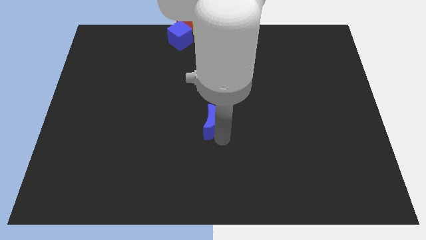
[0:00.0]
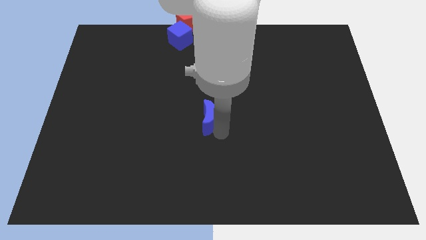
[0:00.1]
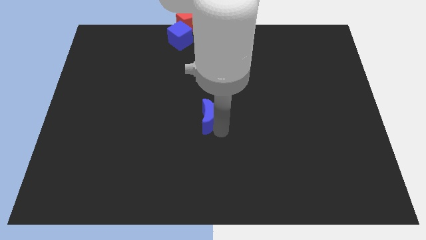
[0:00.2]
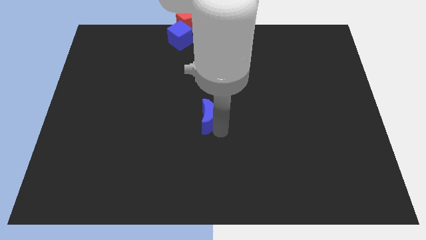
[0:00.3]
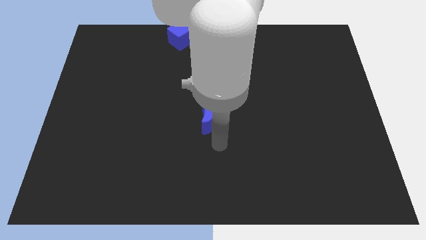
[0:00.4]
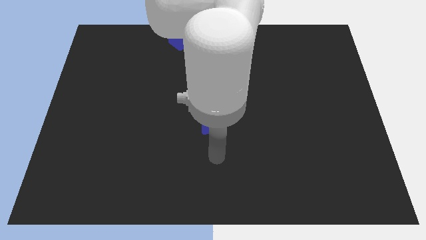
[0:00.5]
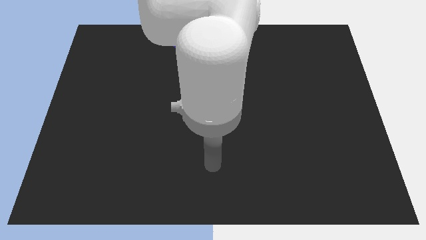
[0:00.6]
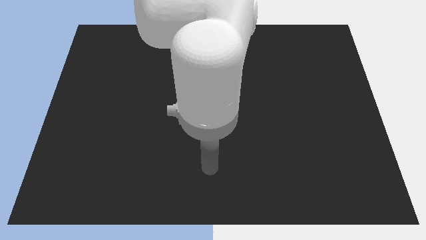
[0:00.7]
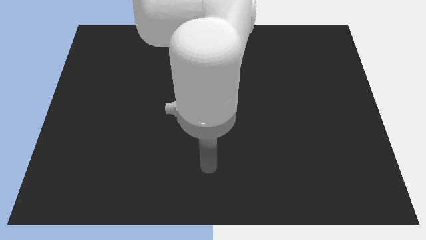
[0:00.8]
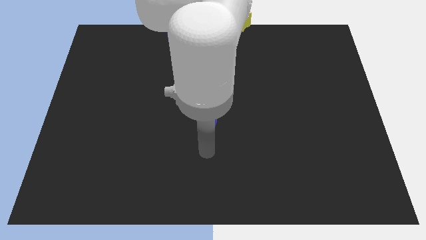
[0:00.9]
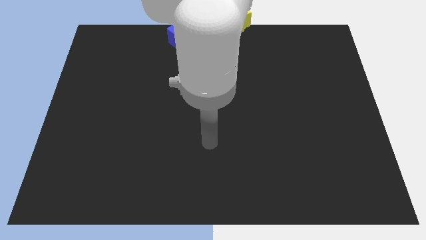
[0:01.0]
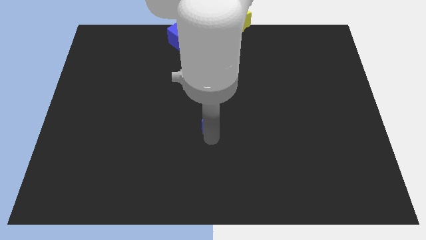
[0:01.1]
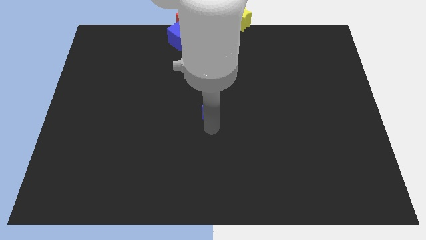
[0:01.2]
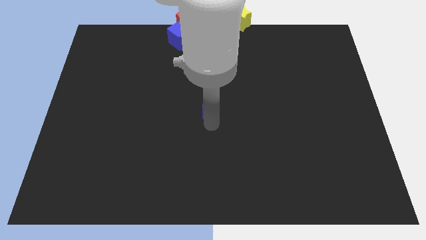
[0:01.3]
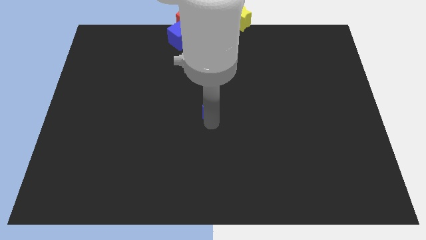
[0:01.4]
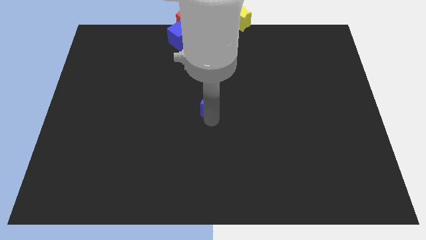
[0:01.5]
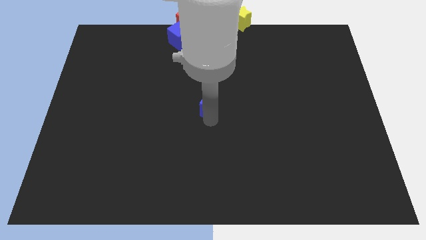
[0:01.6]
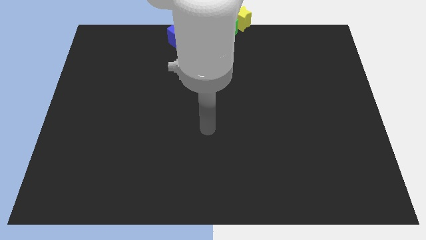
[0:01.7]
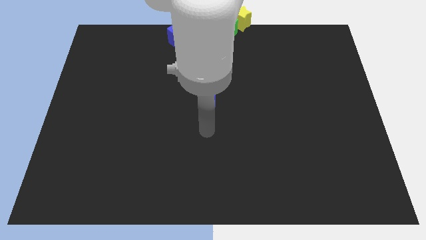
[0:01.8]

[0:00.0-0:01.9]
push the blue moon towards the center

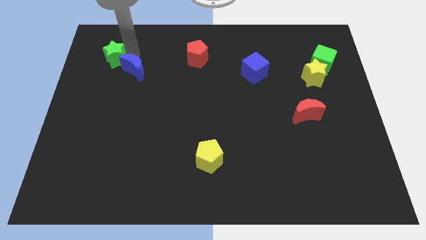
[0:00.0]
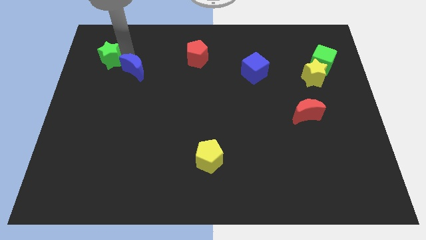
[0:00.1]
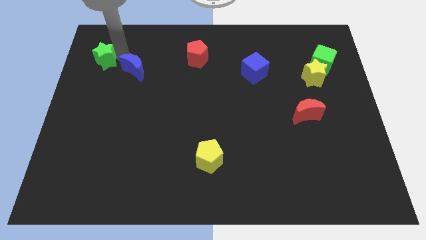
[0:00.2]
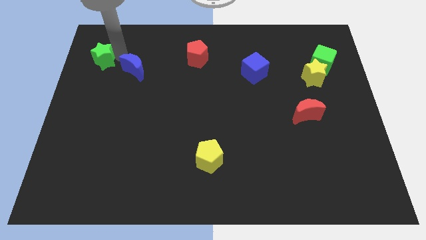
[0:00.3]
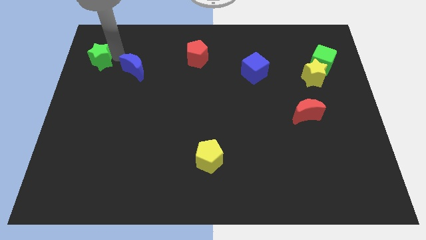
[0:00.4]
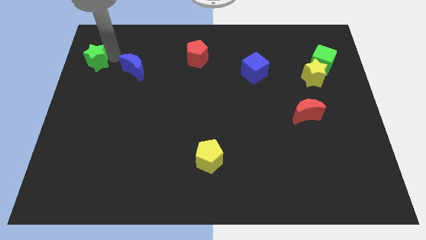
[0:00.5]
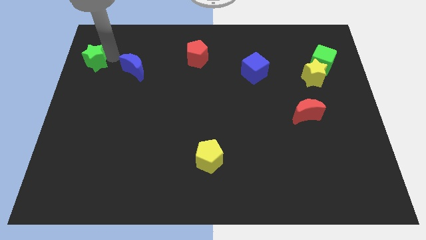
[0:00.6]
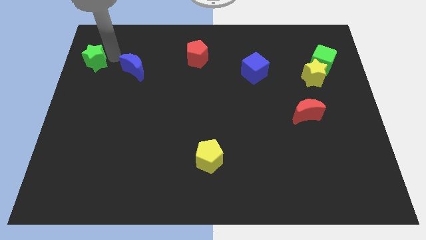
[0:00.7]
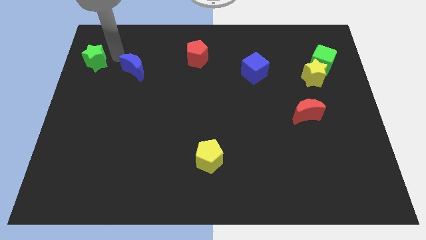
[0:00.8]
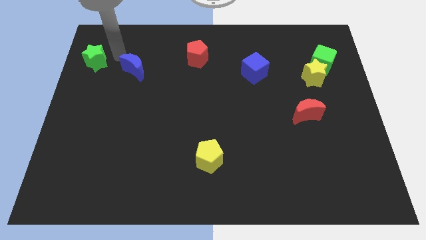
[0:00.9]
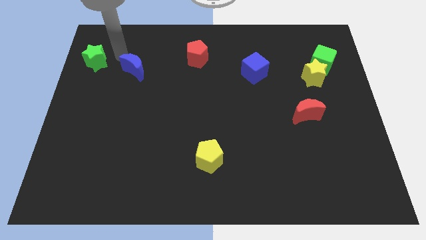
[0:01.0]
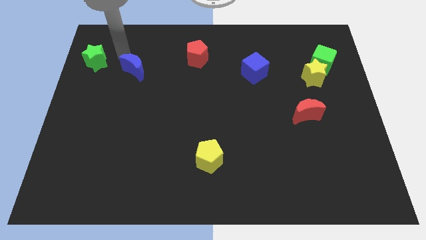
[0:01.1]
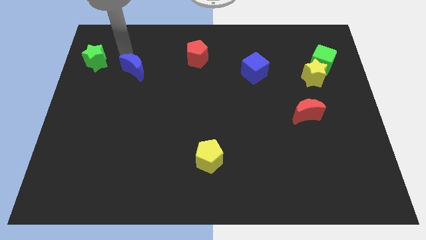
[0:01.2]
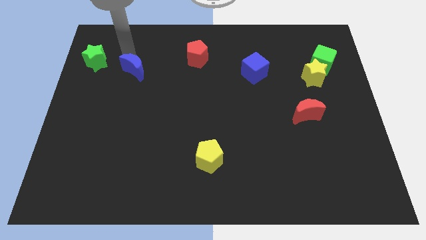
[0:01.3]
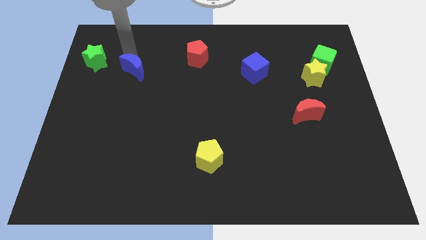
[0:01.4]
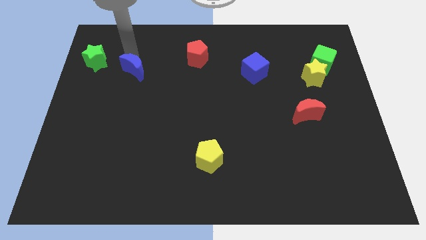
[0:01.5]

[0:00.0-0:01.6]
separate the green star away from the blue crescent

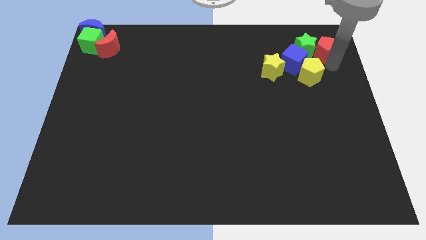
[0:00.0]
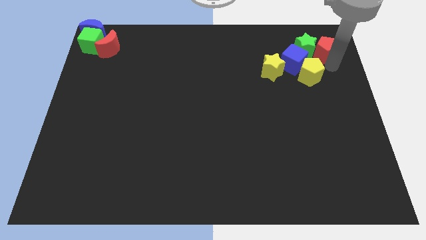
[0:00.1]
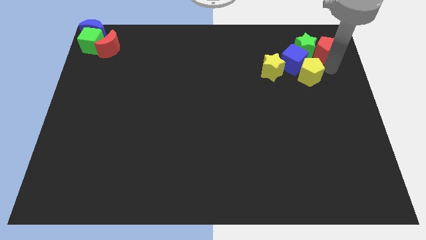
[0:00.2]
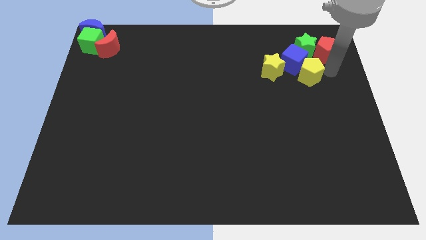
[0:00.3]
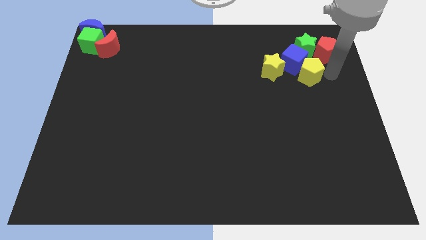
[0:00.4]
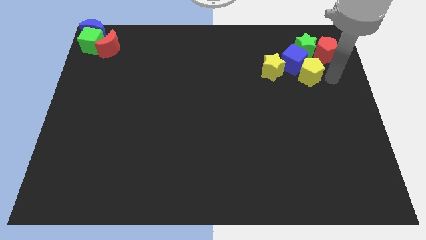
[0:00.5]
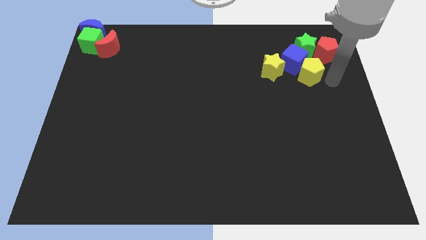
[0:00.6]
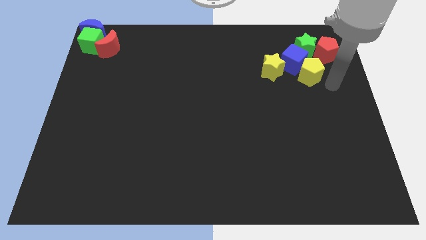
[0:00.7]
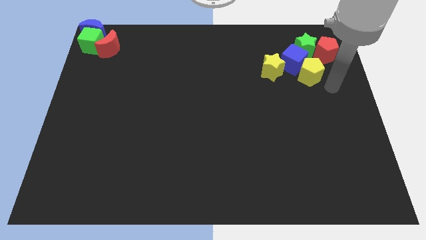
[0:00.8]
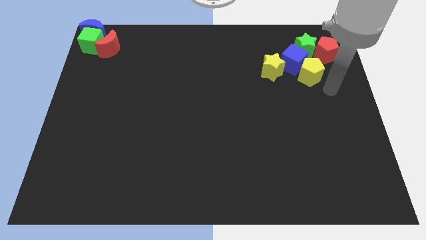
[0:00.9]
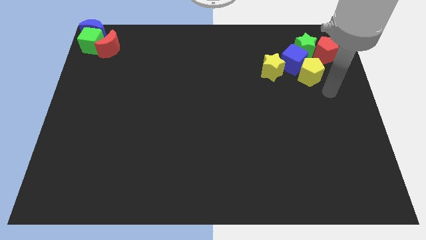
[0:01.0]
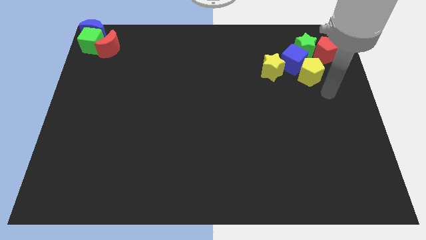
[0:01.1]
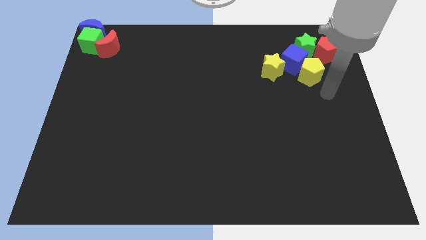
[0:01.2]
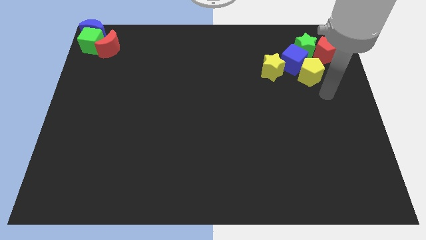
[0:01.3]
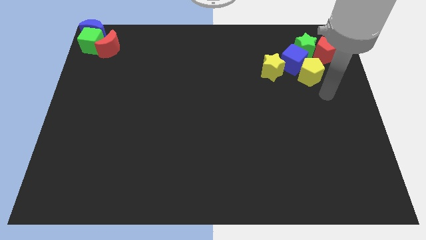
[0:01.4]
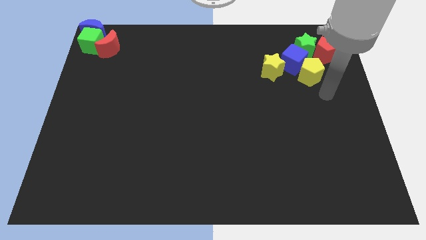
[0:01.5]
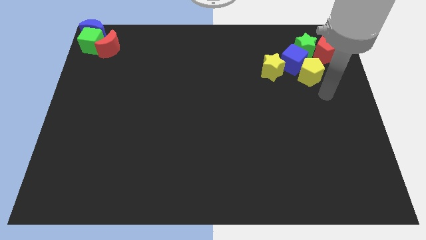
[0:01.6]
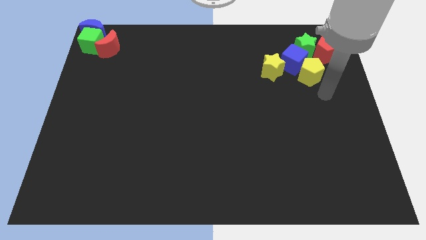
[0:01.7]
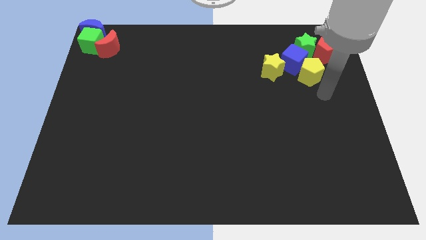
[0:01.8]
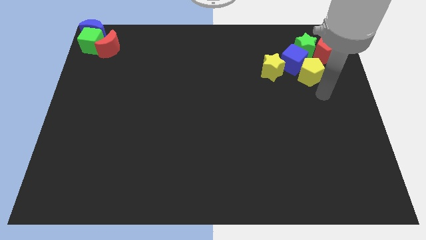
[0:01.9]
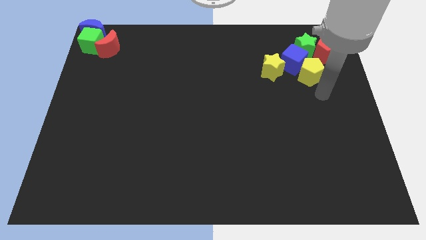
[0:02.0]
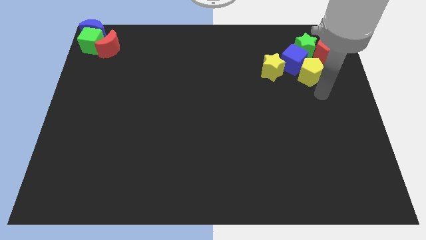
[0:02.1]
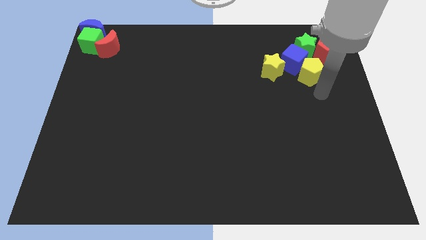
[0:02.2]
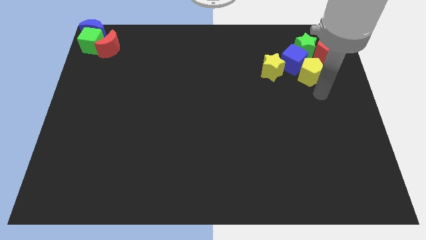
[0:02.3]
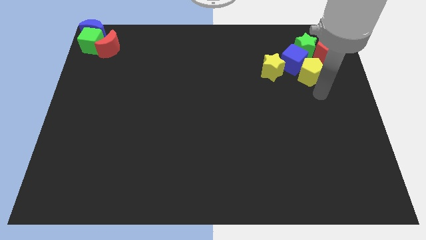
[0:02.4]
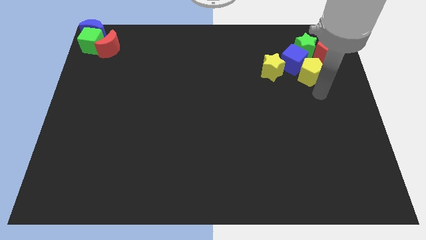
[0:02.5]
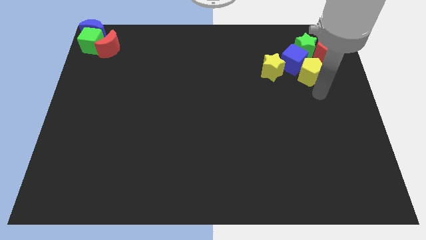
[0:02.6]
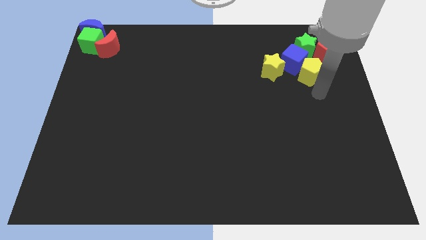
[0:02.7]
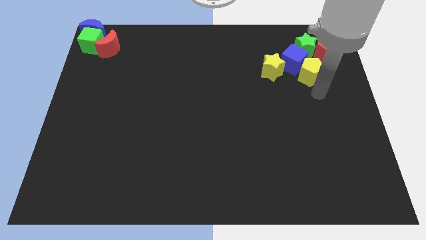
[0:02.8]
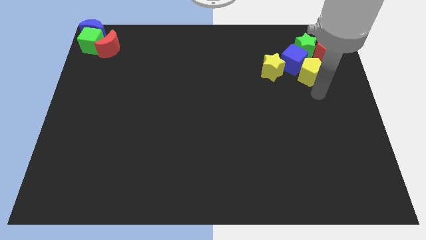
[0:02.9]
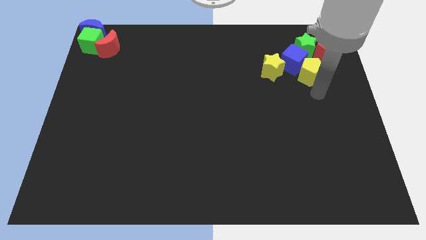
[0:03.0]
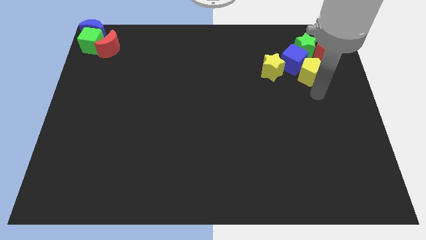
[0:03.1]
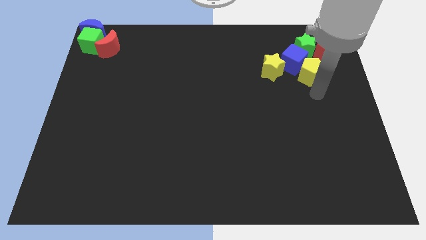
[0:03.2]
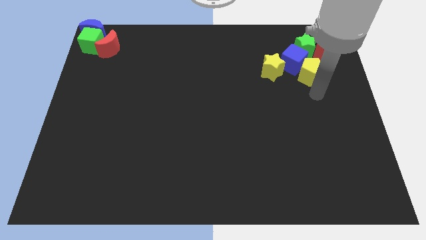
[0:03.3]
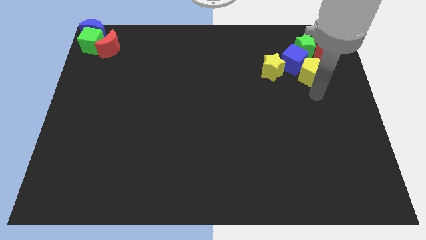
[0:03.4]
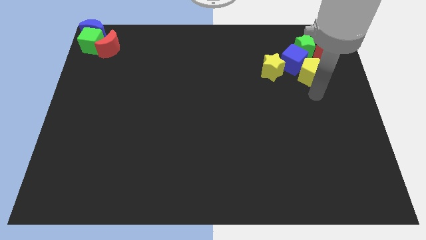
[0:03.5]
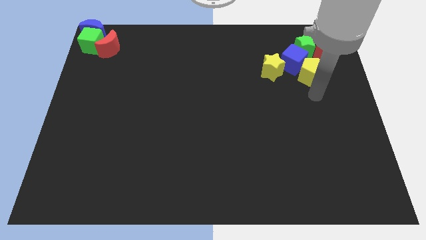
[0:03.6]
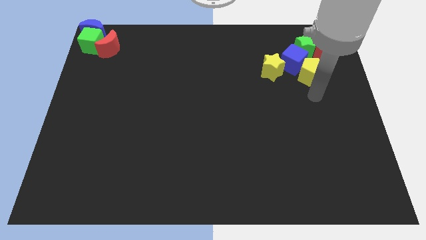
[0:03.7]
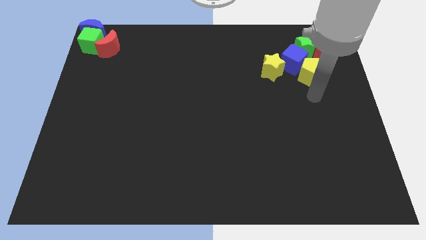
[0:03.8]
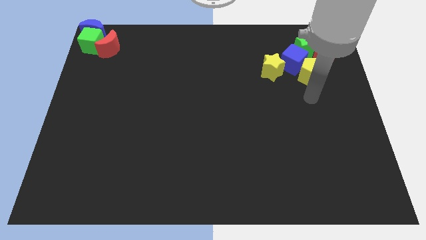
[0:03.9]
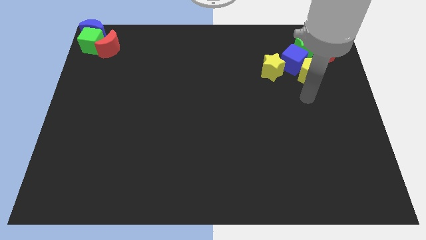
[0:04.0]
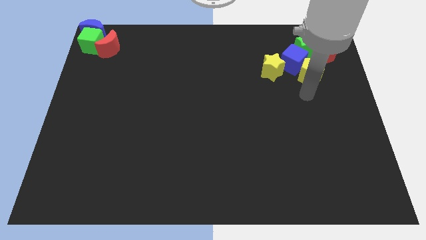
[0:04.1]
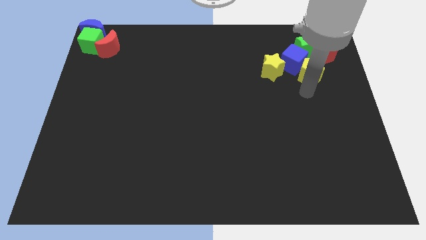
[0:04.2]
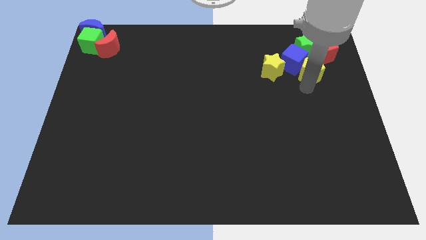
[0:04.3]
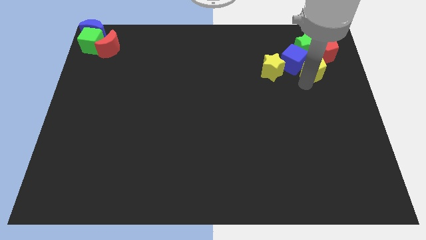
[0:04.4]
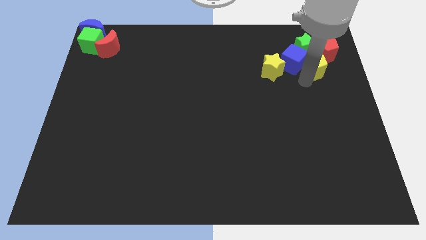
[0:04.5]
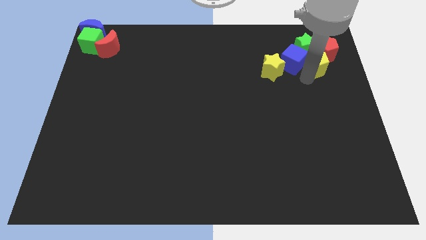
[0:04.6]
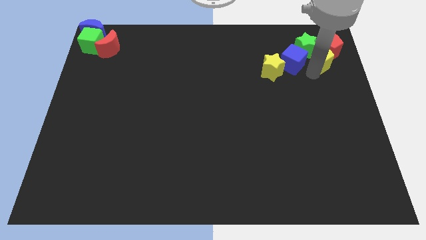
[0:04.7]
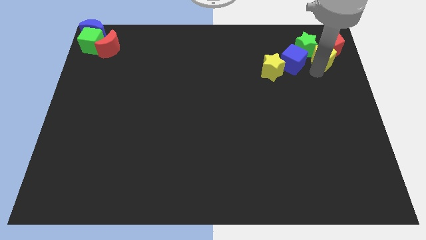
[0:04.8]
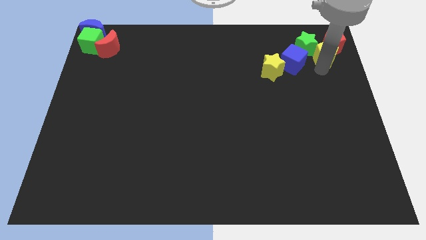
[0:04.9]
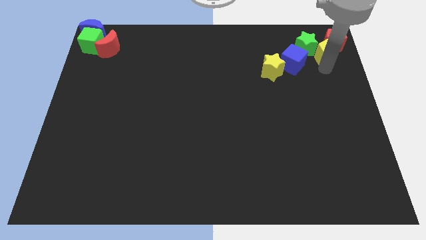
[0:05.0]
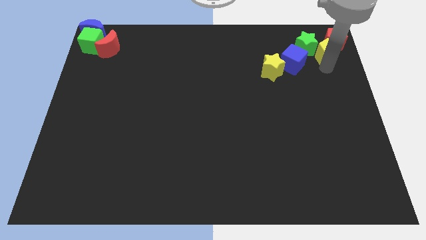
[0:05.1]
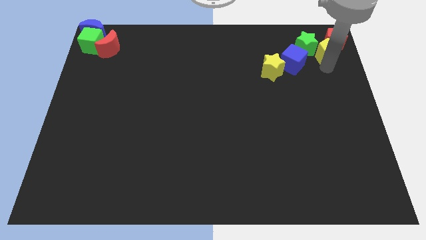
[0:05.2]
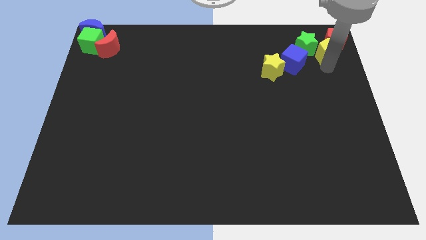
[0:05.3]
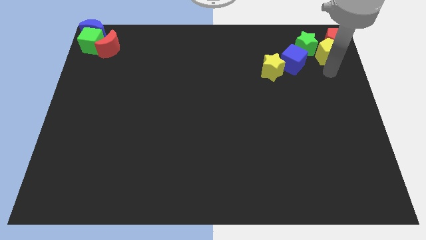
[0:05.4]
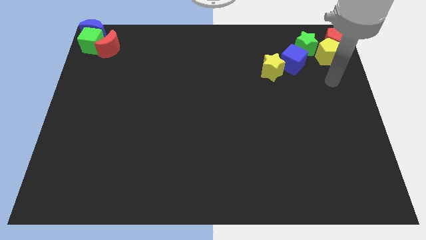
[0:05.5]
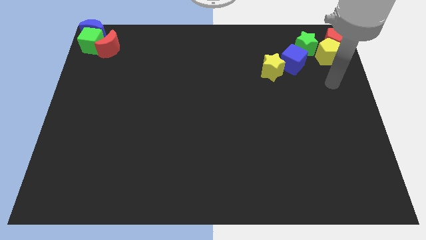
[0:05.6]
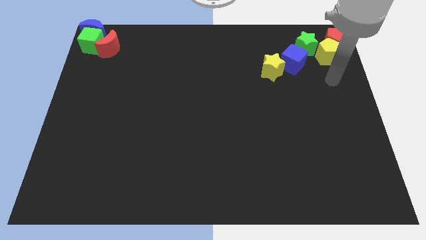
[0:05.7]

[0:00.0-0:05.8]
move the red pentagon and yellow pentagon to the top right of the board
